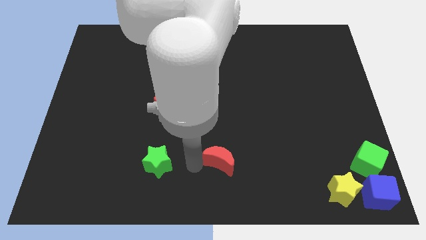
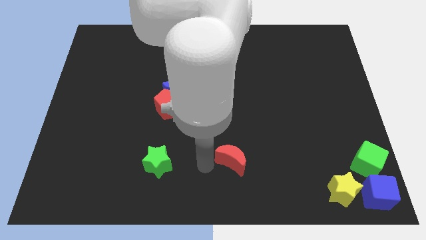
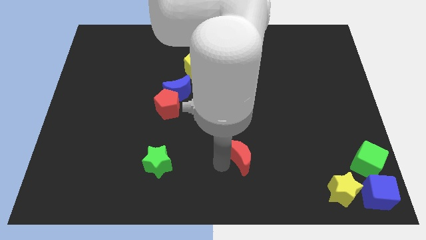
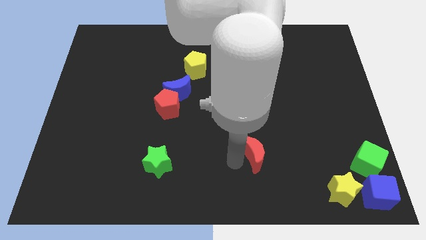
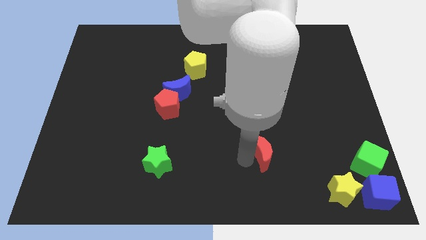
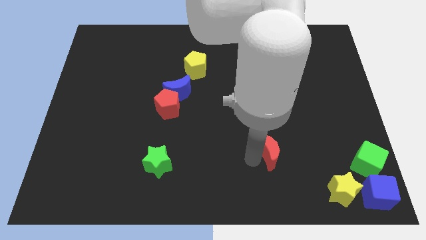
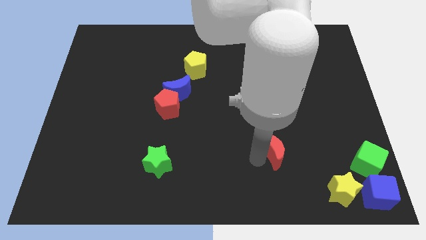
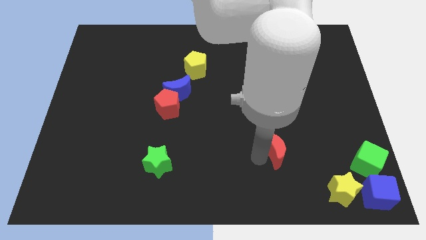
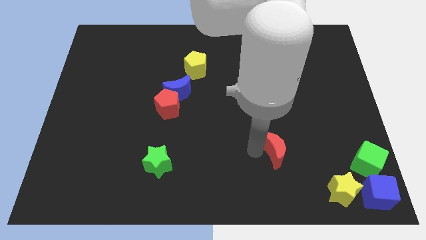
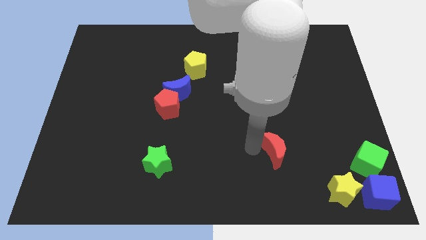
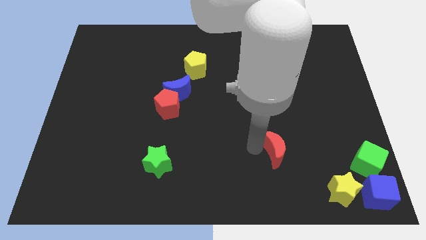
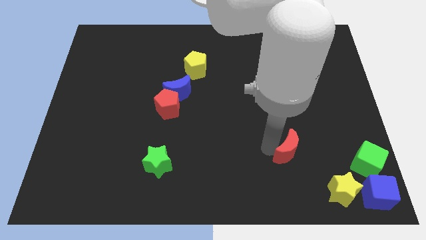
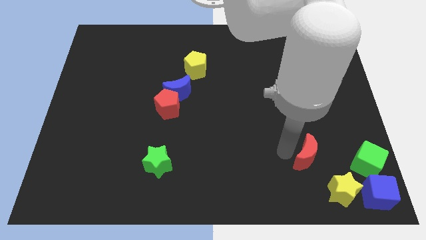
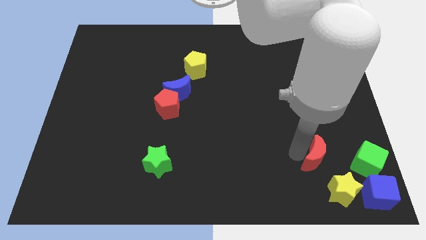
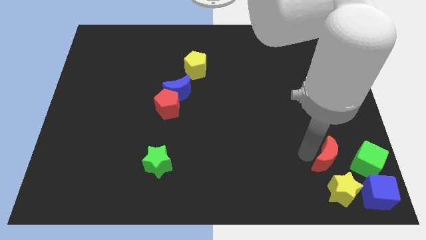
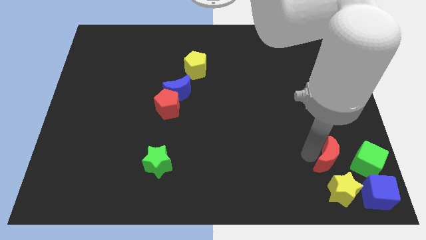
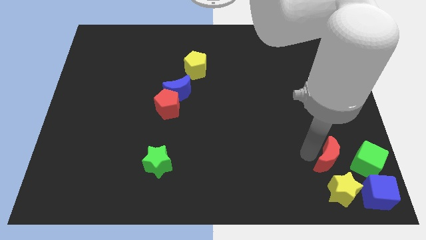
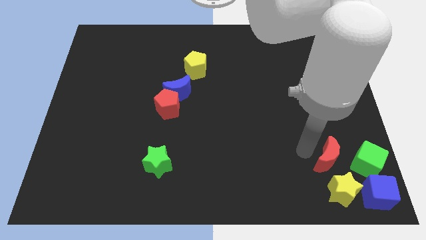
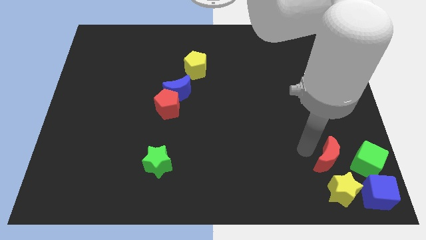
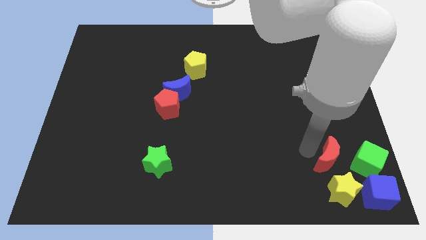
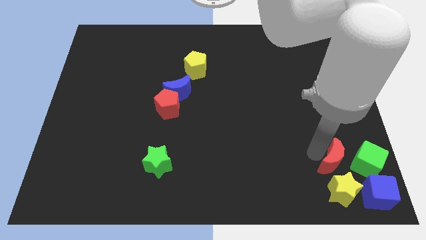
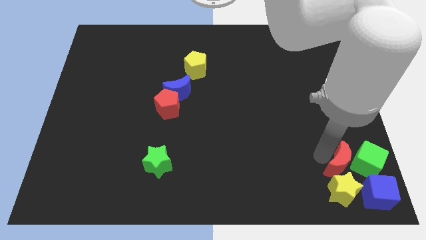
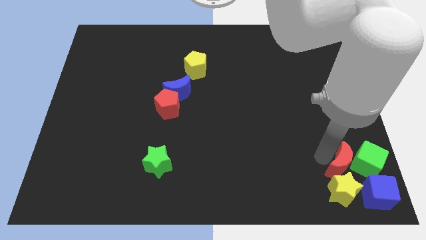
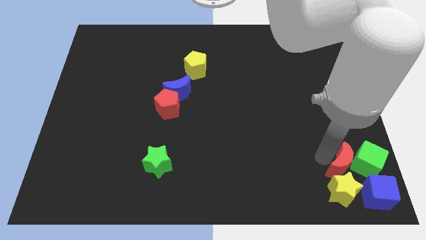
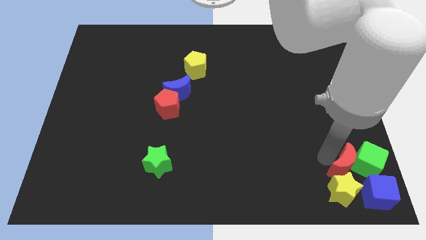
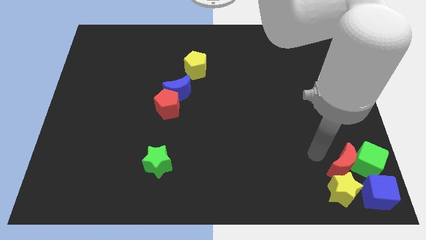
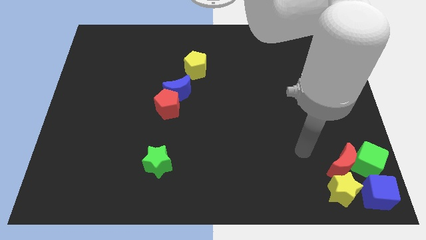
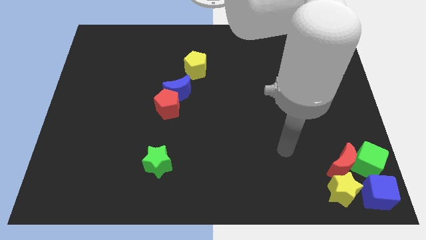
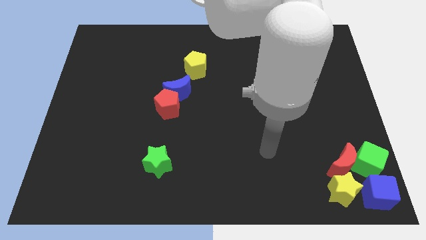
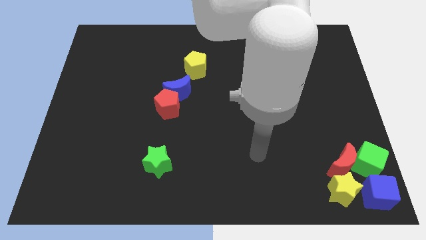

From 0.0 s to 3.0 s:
slide the red moon into the green cube

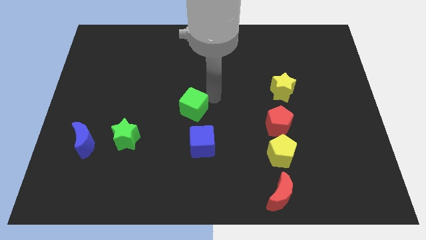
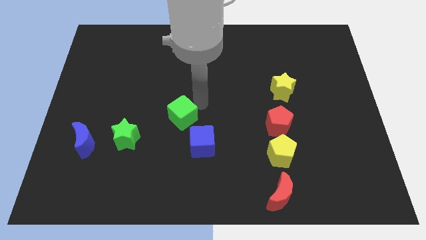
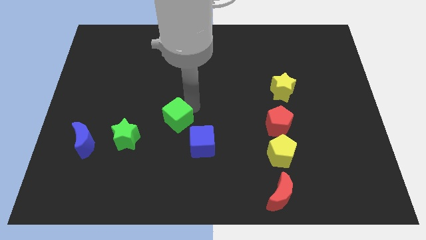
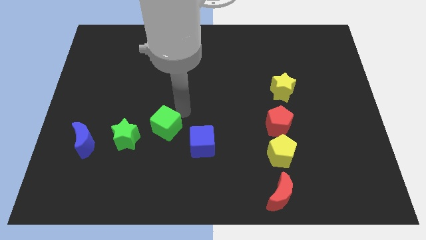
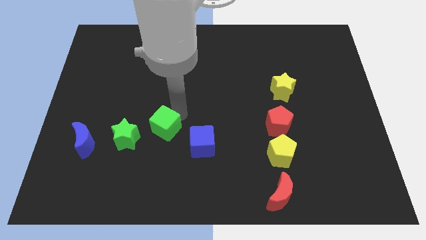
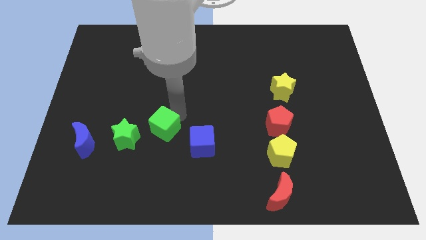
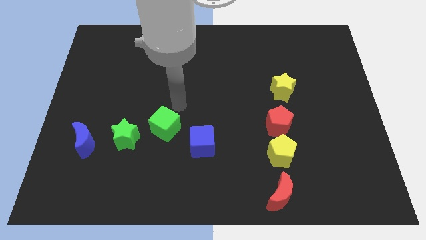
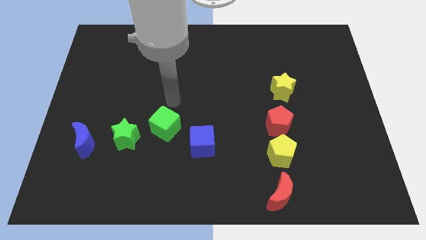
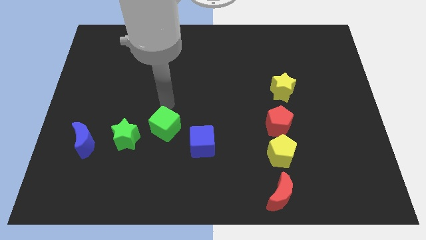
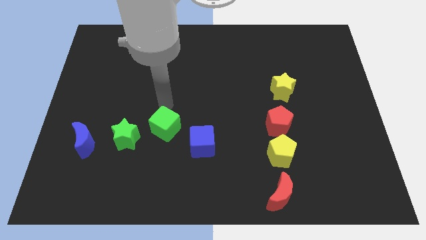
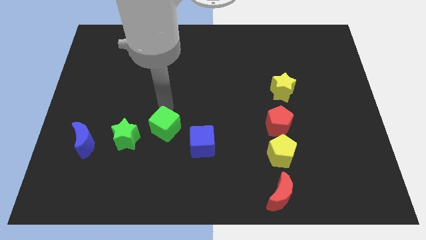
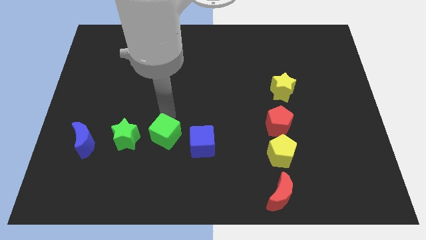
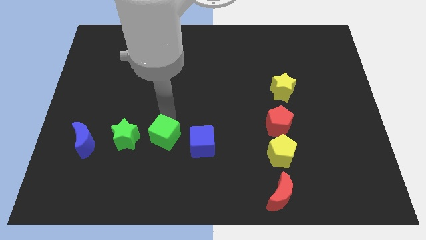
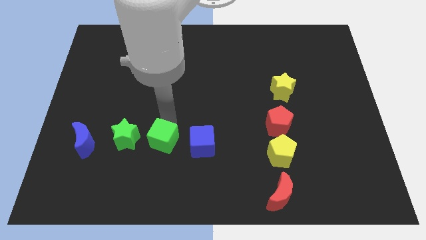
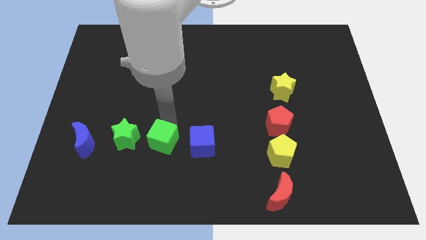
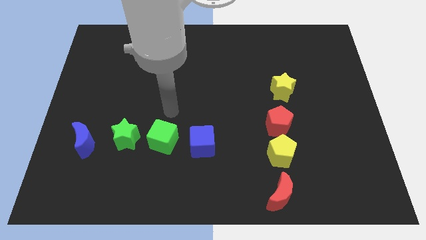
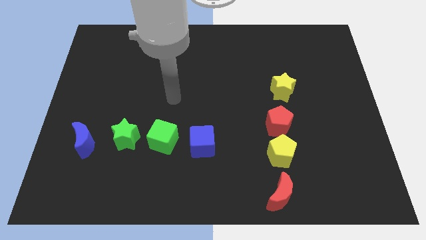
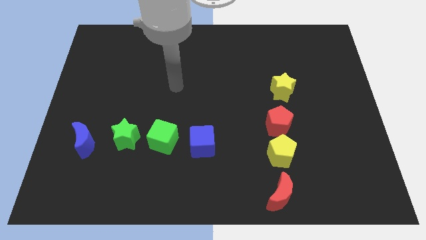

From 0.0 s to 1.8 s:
place green cube beside green star

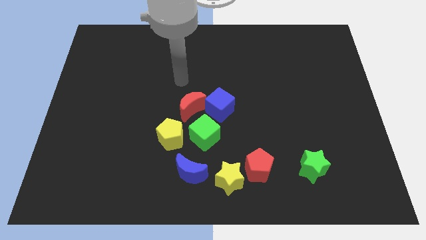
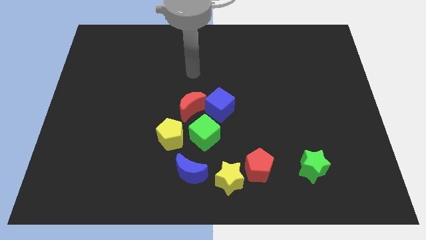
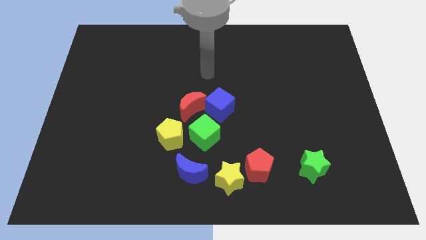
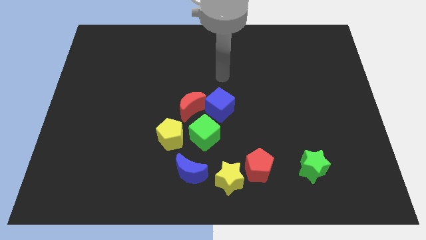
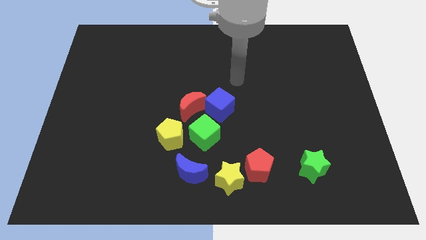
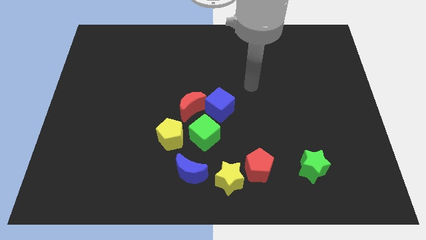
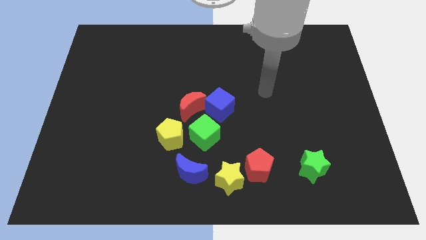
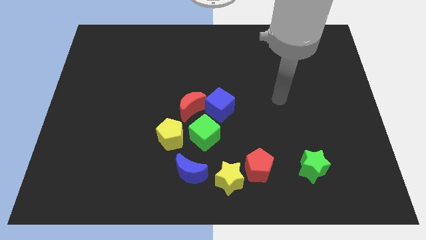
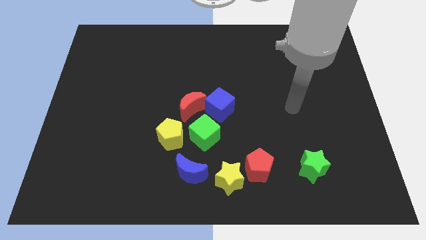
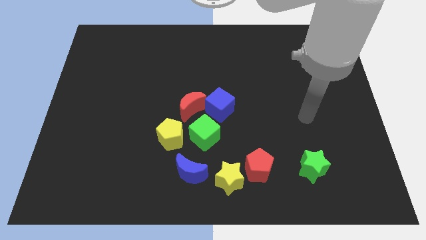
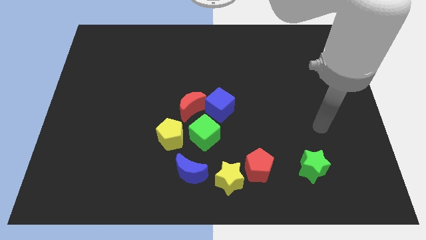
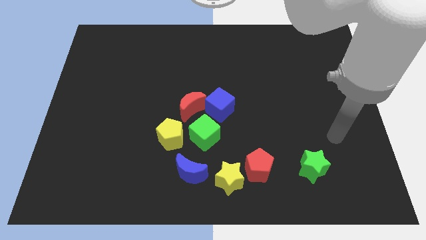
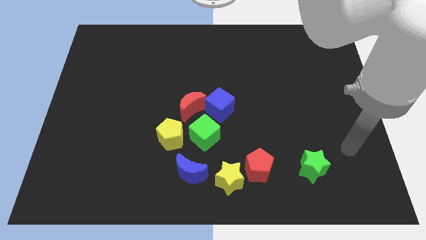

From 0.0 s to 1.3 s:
move your arm down to the right

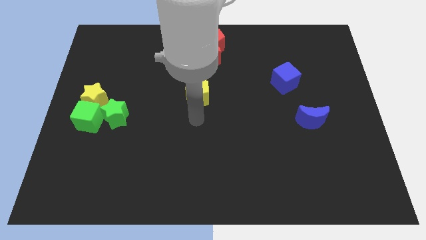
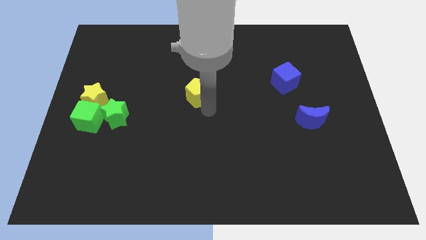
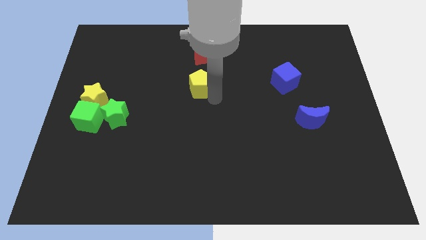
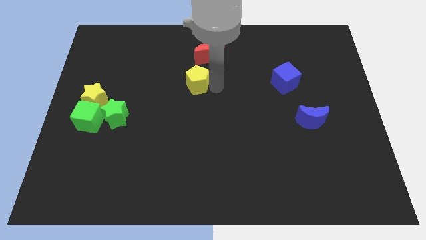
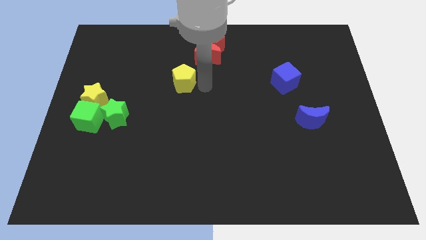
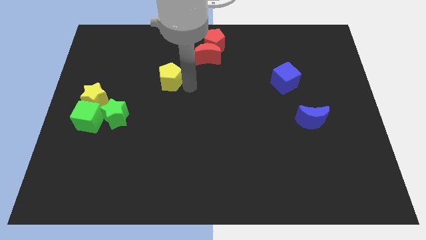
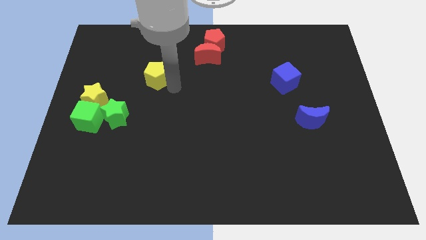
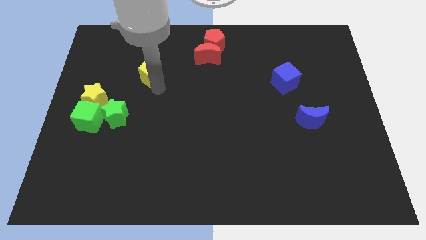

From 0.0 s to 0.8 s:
push the yellow pentagon vertical to the red crescent

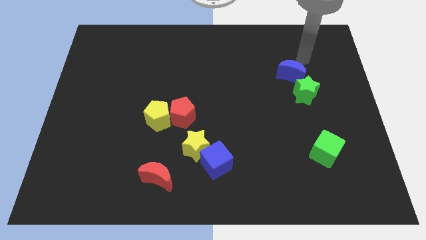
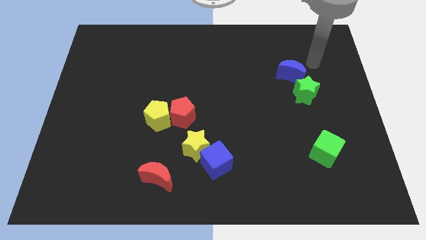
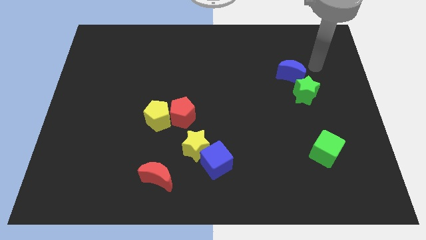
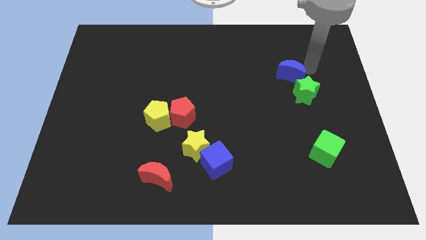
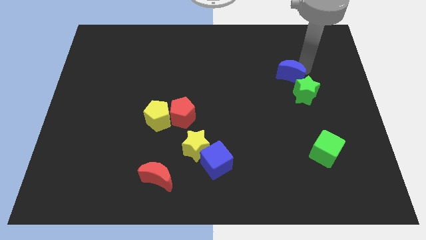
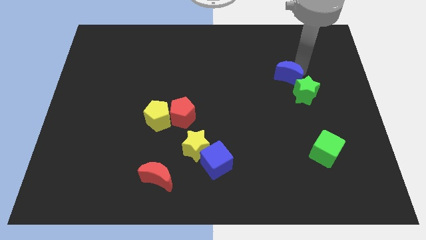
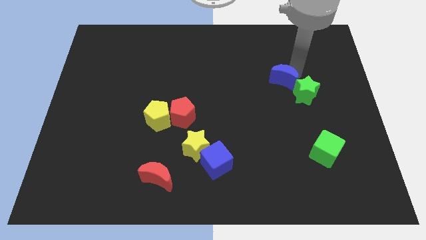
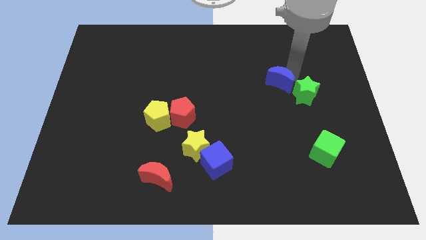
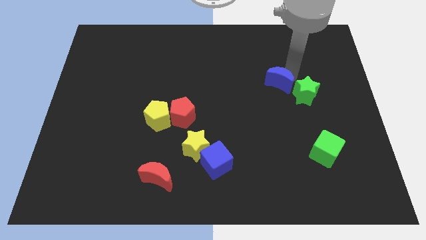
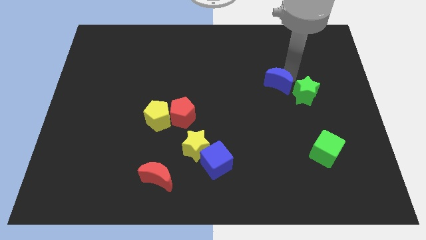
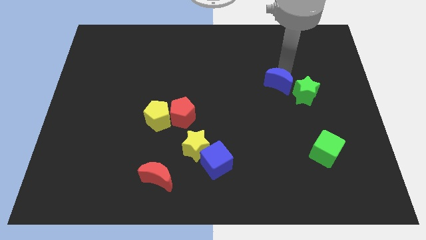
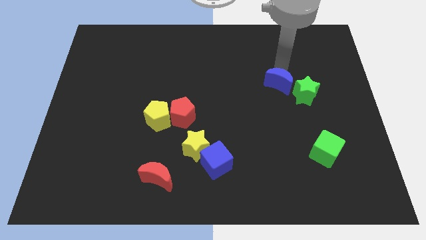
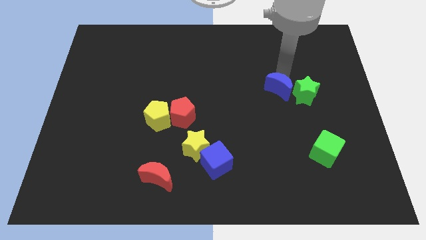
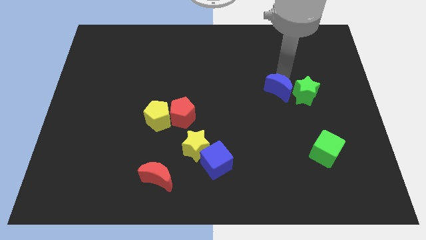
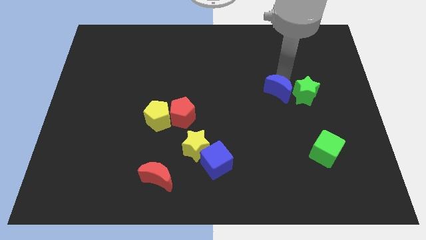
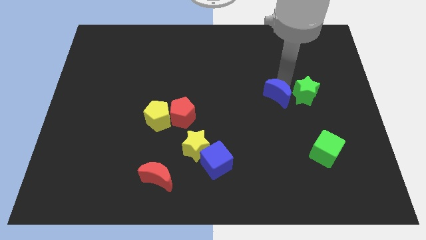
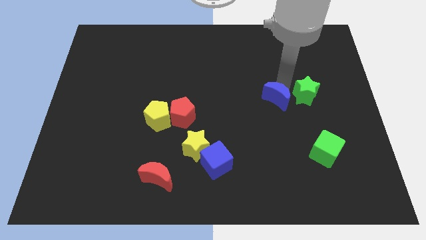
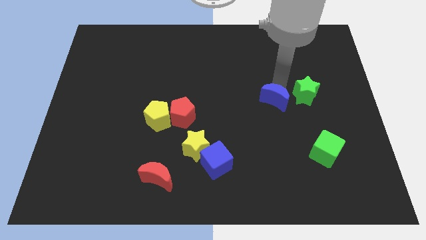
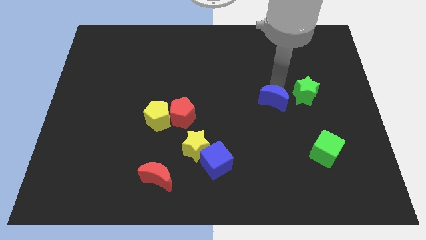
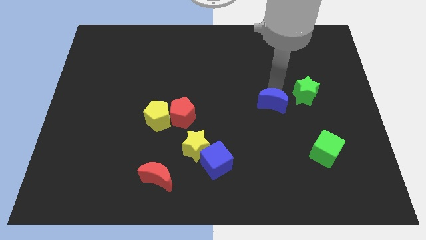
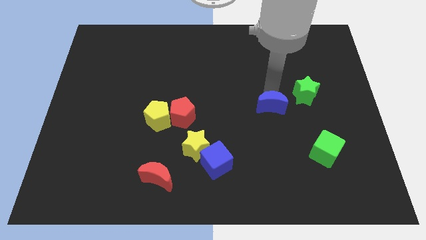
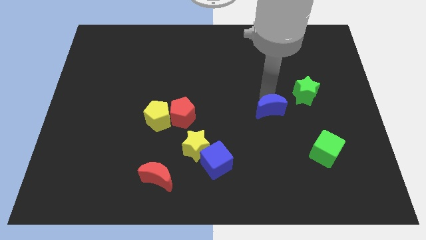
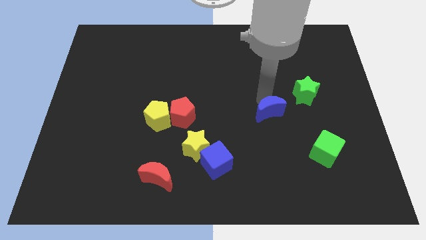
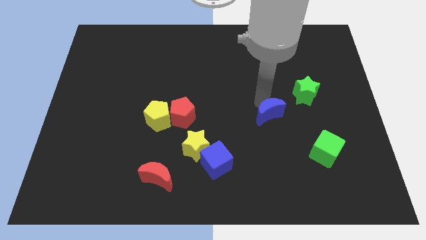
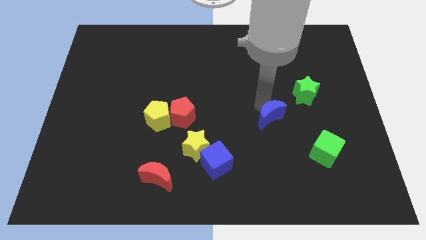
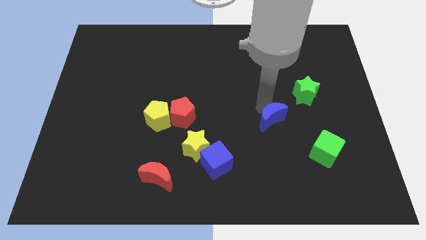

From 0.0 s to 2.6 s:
place the blue crescent in between the blue cube and the green star
